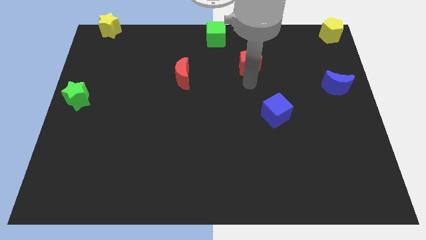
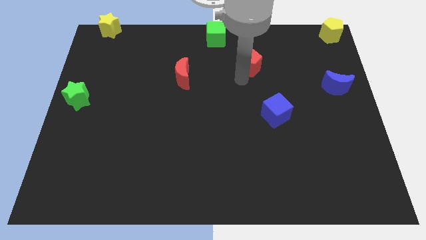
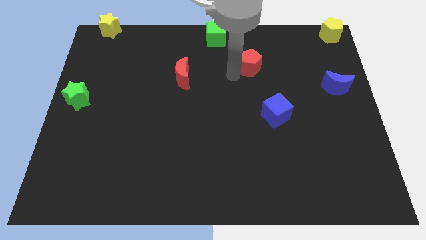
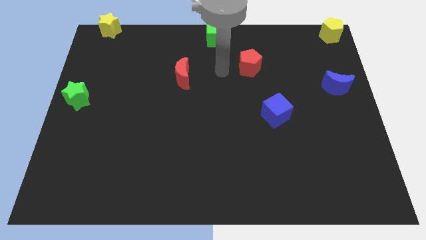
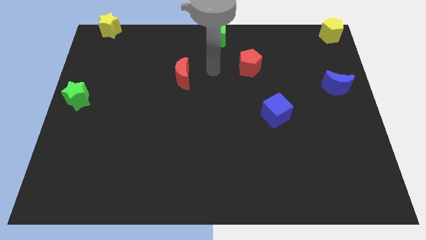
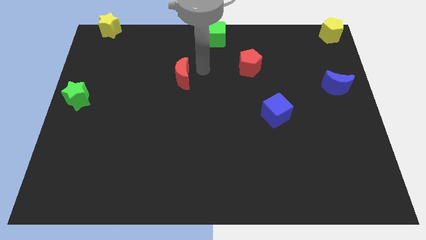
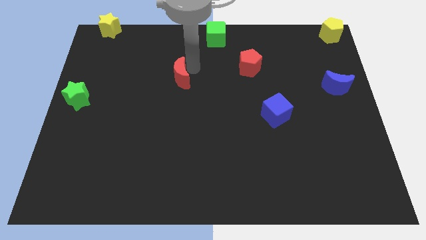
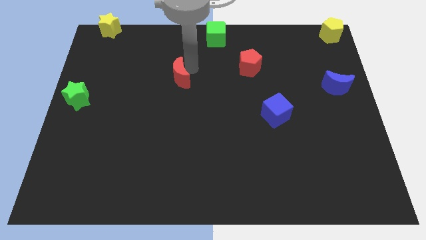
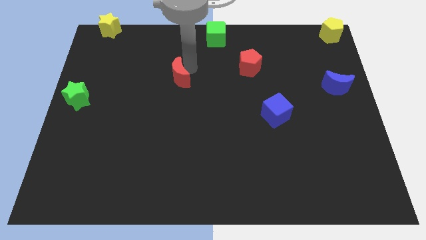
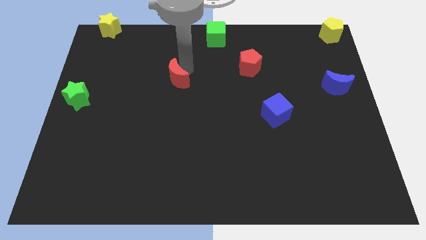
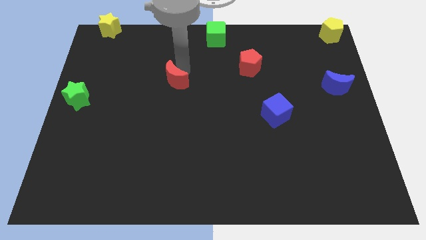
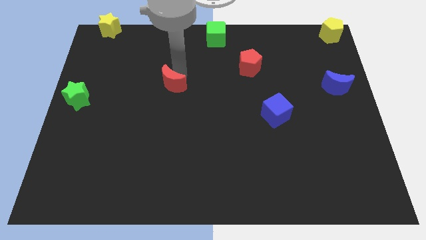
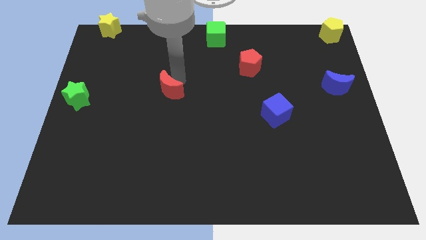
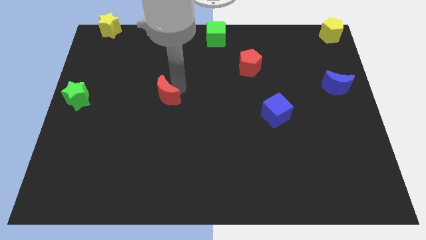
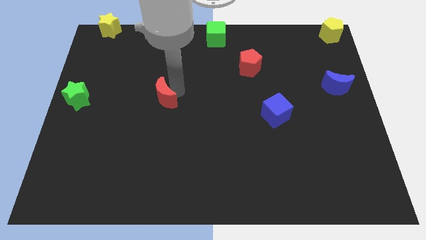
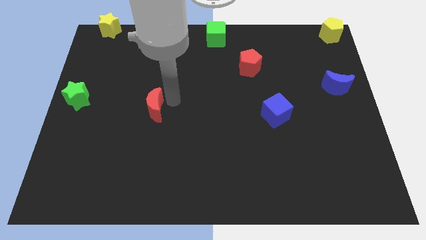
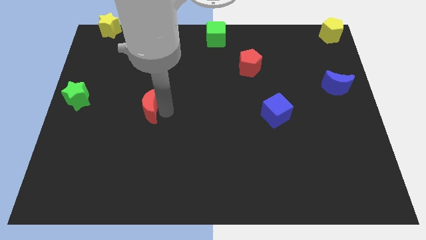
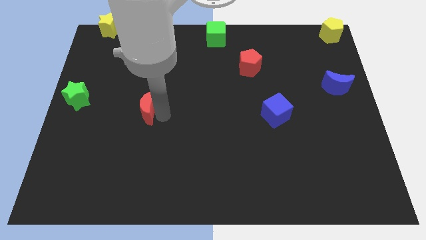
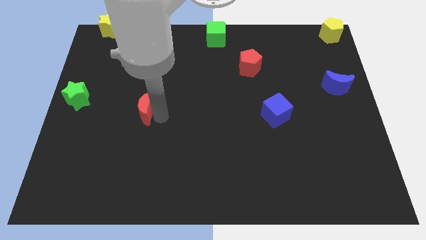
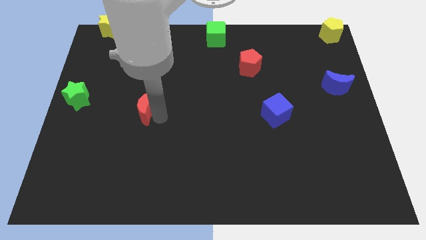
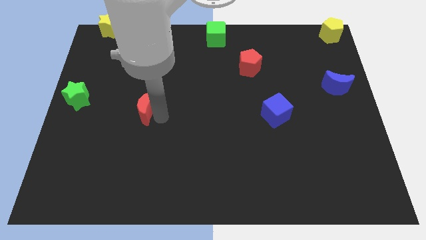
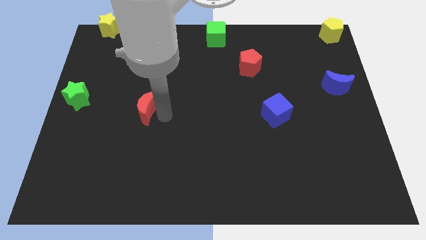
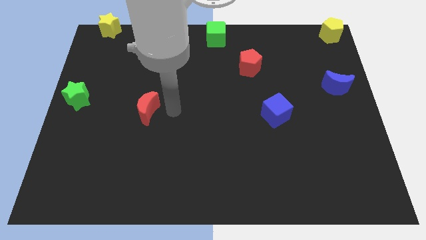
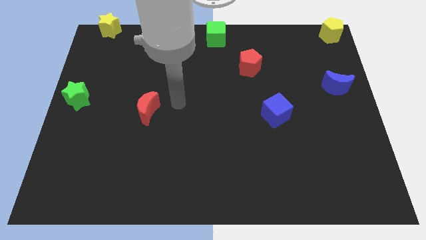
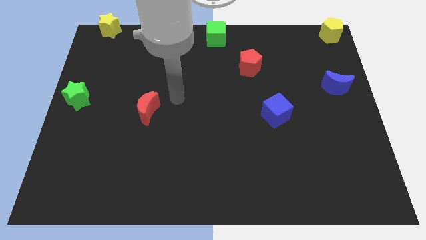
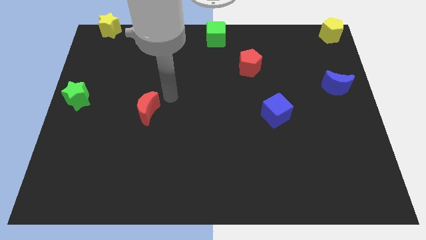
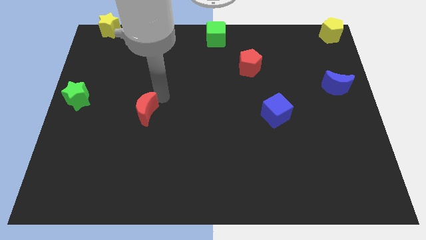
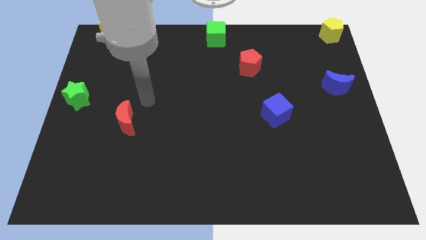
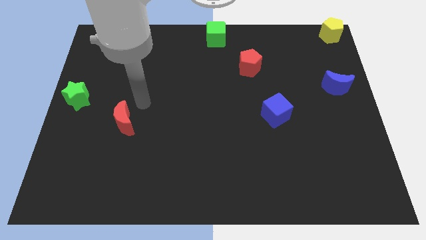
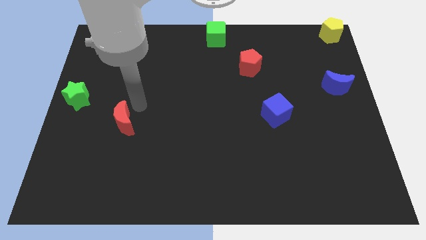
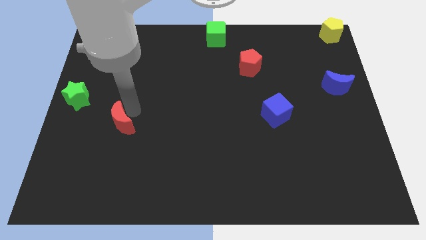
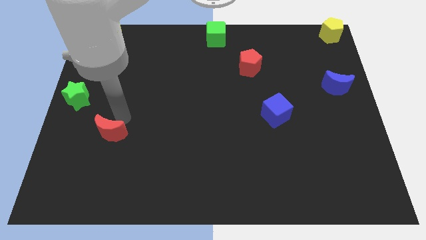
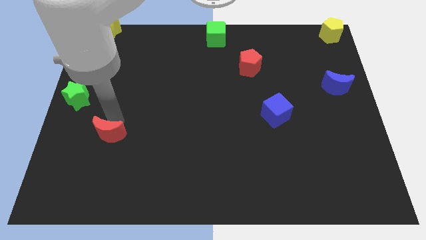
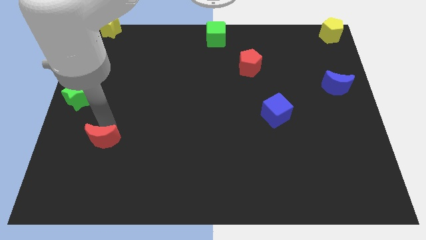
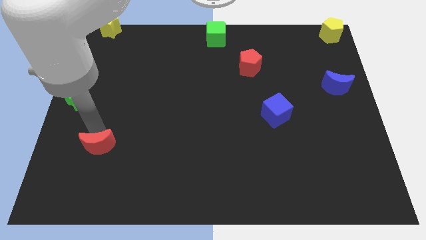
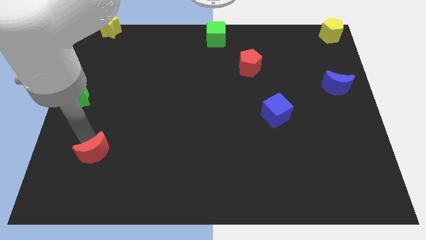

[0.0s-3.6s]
push the red moon towards the bottom left side of the board

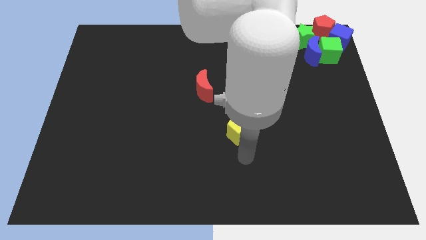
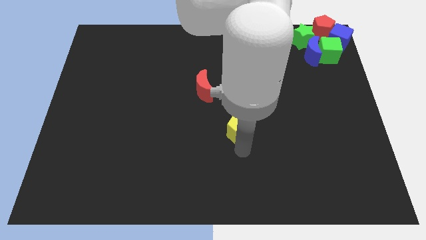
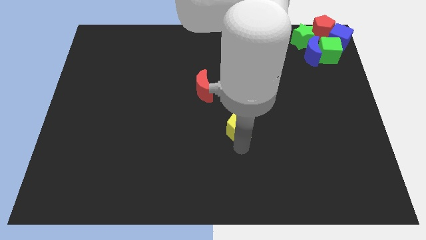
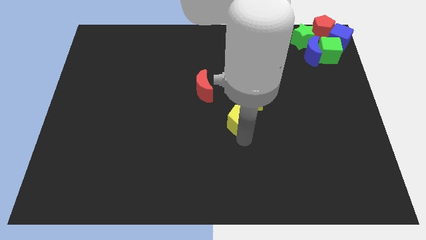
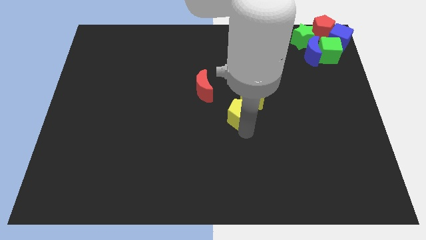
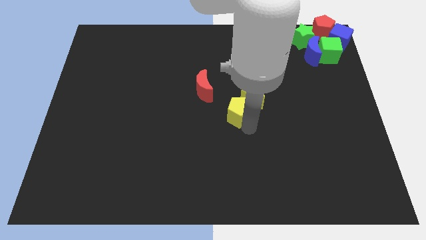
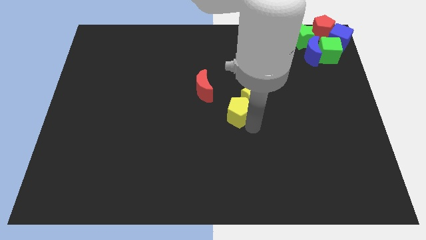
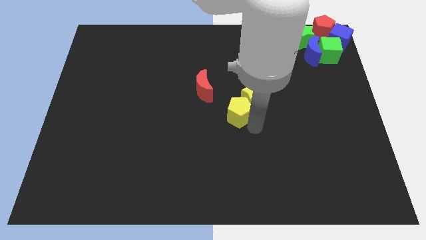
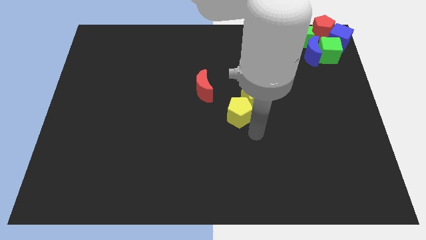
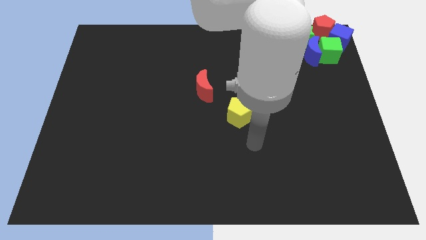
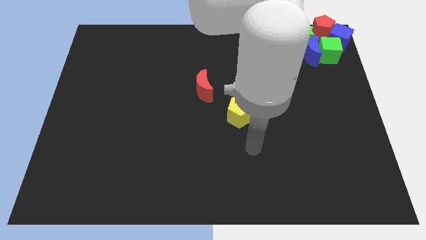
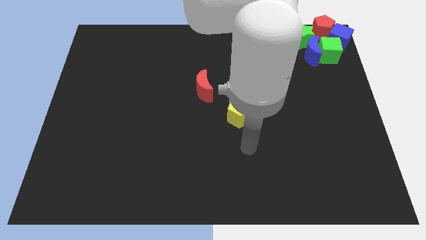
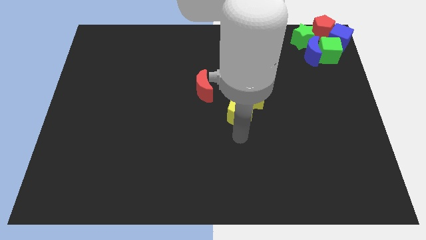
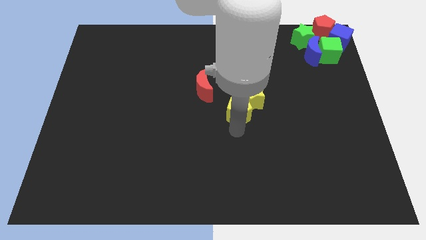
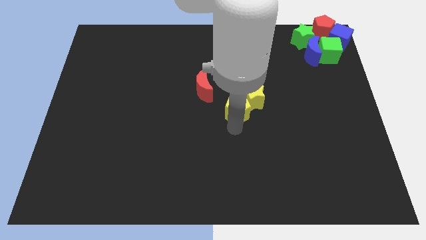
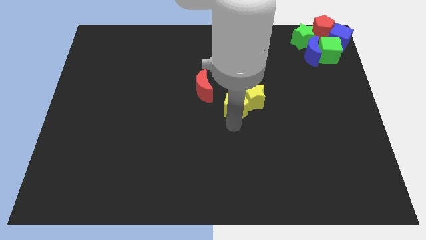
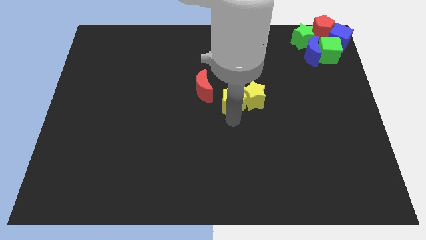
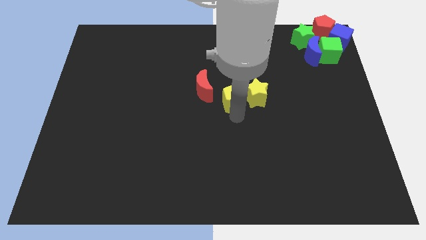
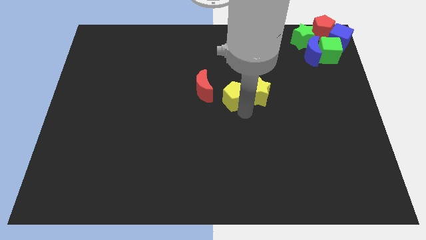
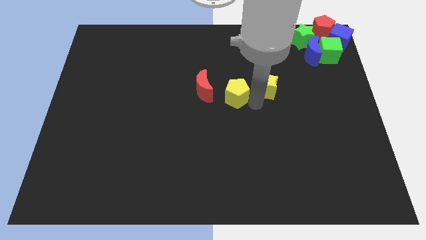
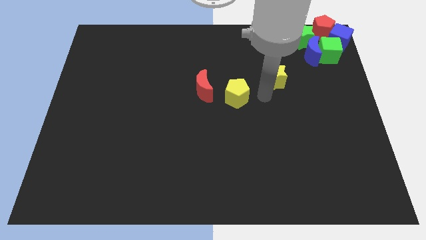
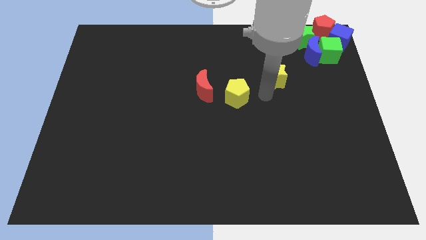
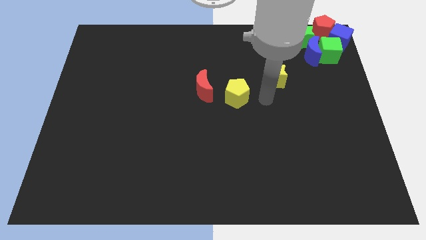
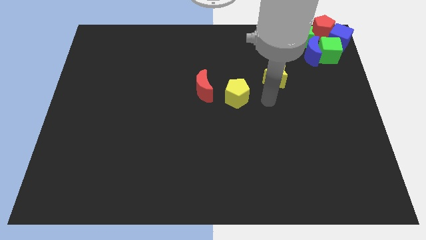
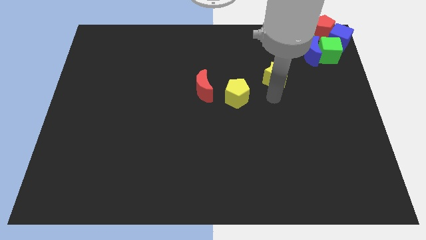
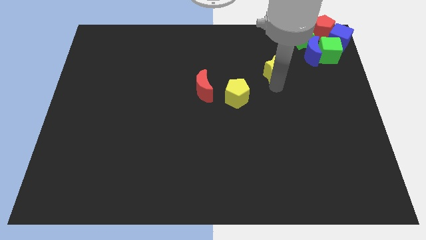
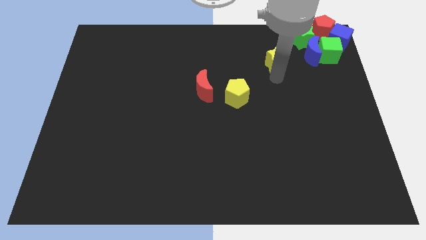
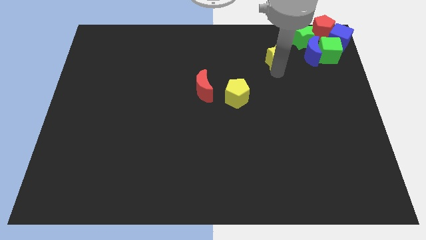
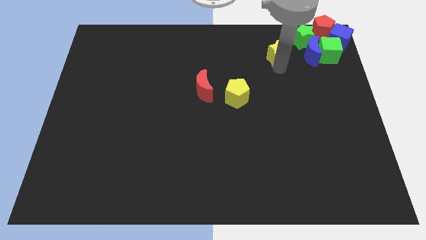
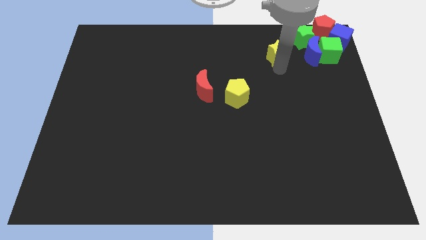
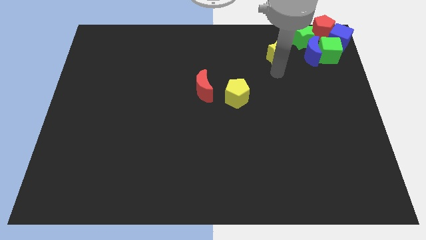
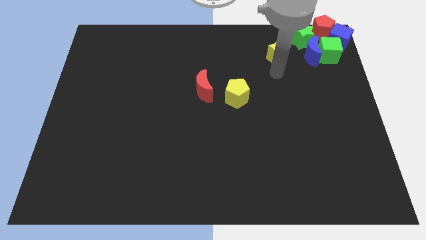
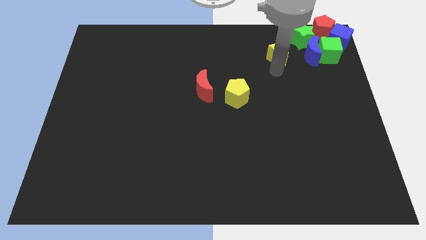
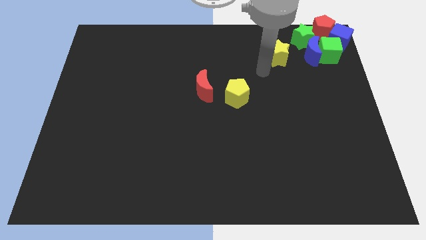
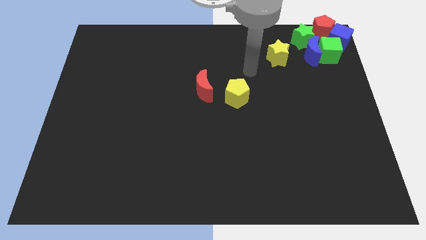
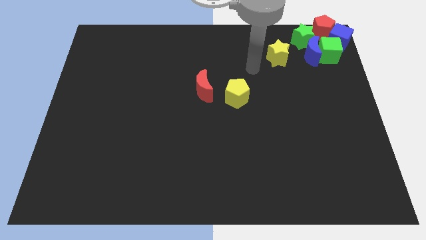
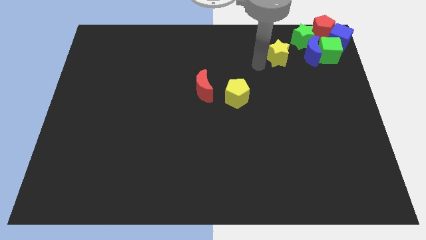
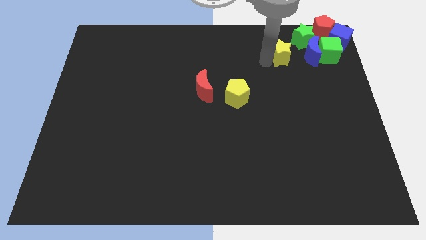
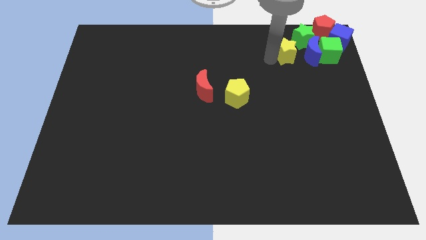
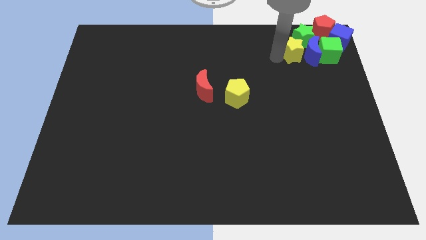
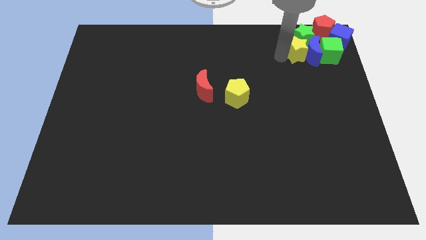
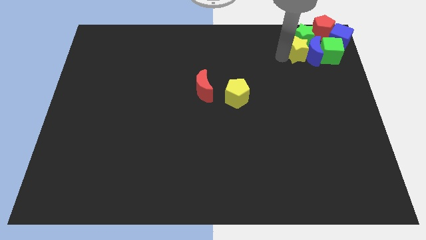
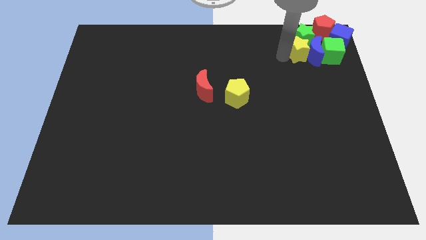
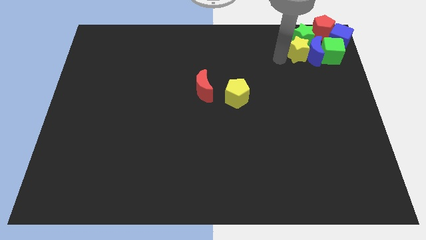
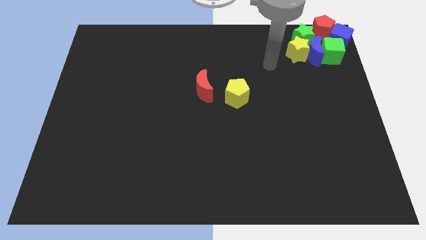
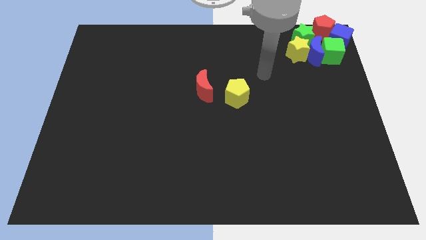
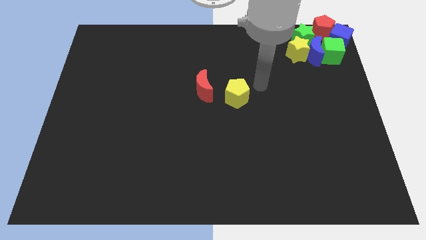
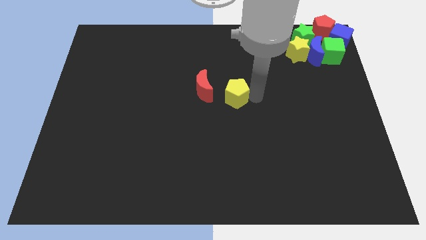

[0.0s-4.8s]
push the yellow star into the blue crescent

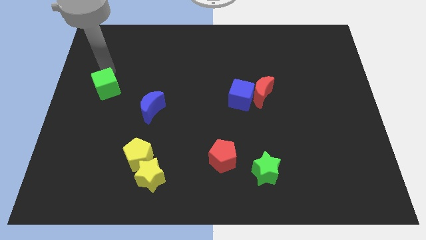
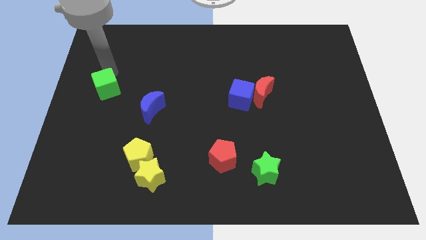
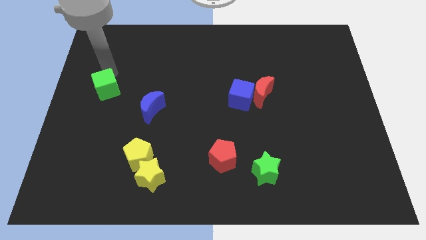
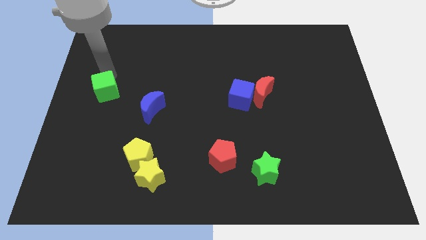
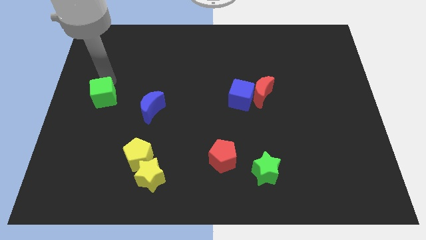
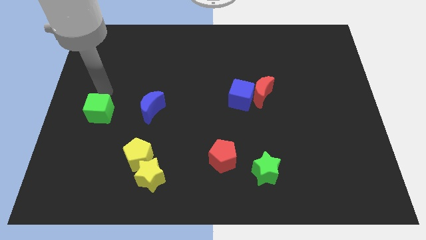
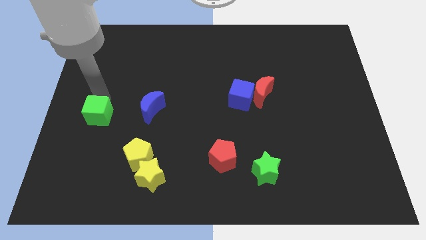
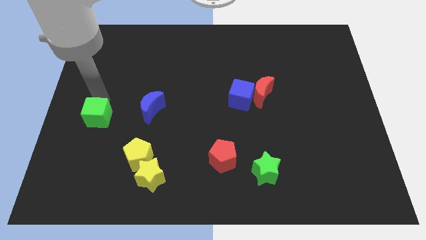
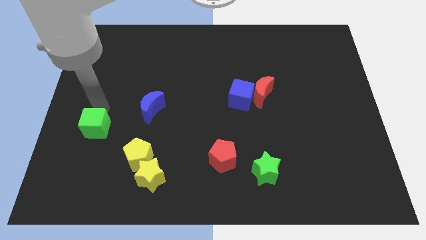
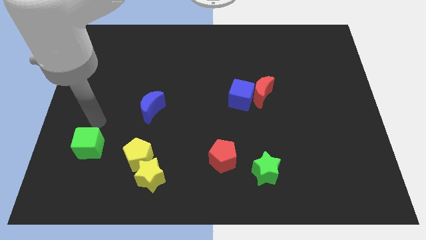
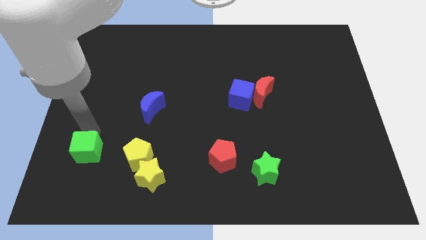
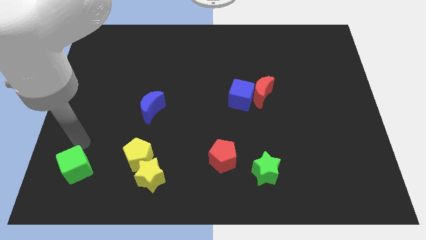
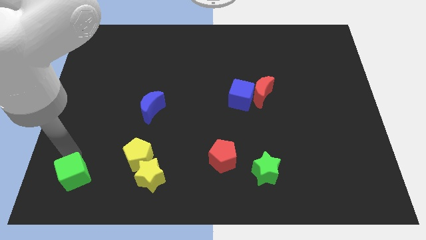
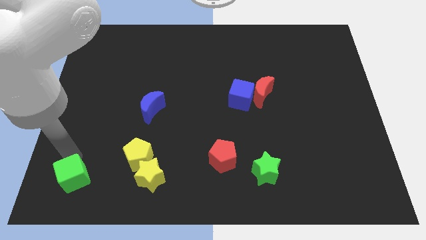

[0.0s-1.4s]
push the green cube towards down
